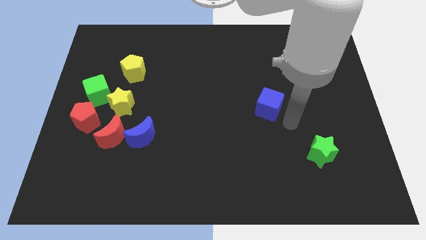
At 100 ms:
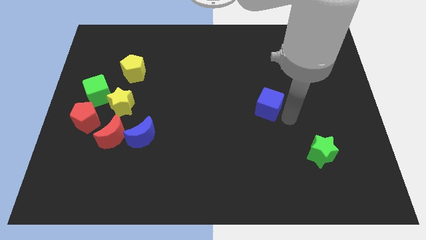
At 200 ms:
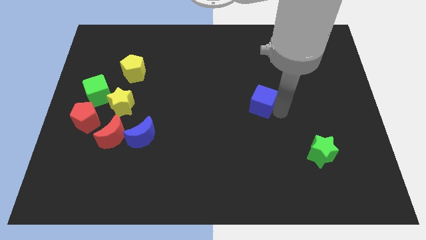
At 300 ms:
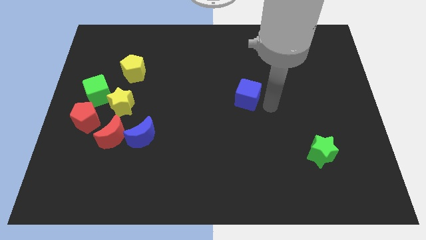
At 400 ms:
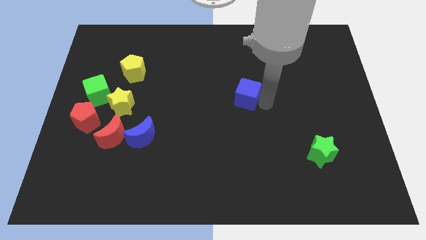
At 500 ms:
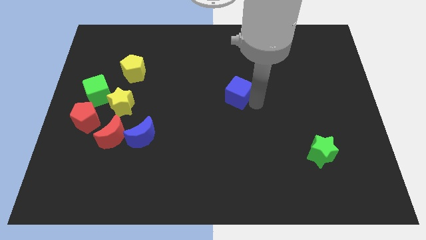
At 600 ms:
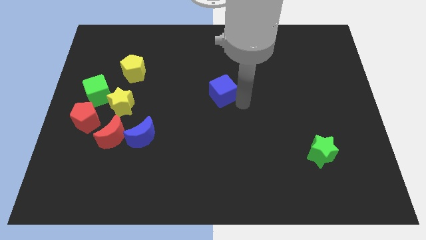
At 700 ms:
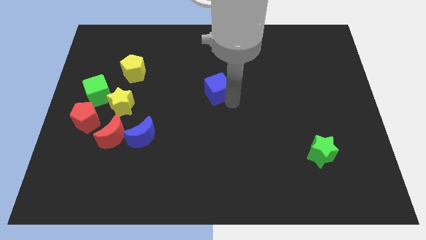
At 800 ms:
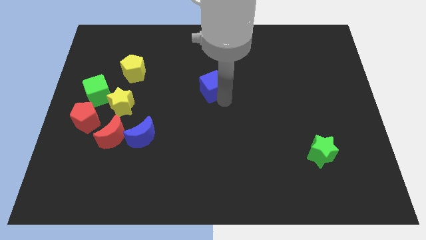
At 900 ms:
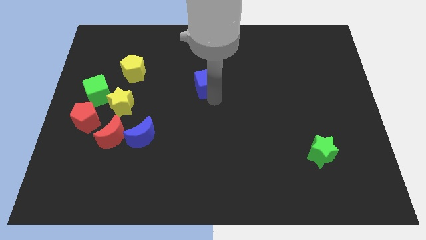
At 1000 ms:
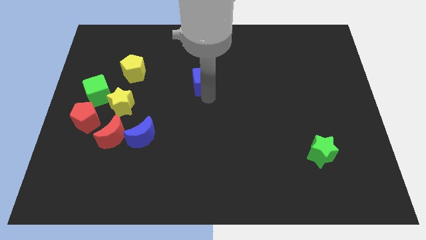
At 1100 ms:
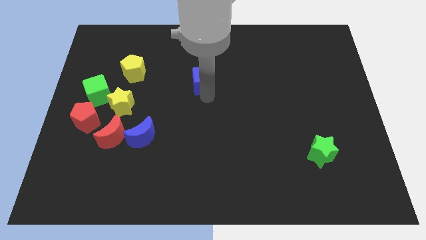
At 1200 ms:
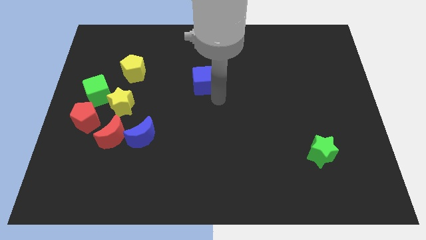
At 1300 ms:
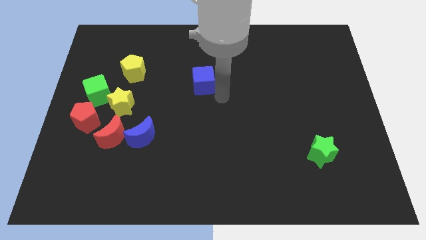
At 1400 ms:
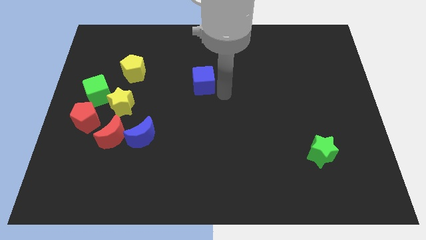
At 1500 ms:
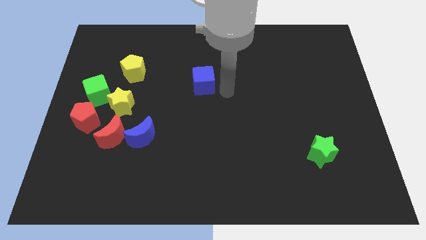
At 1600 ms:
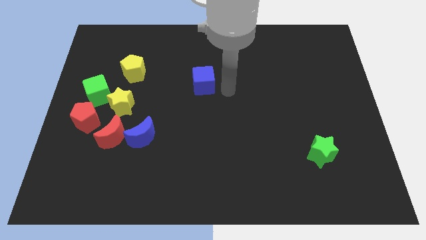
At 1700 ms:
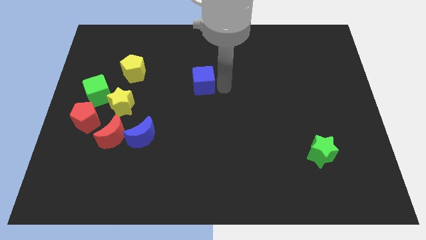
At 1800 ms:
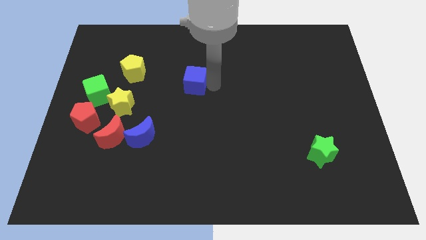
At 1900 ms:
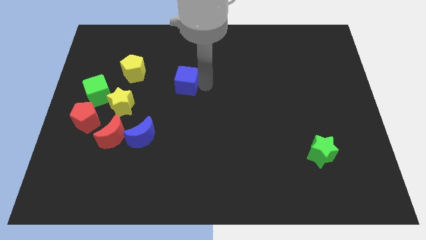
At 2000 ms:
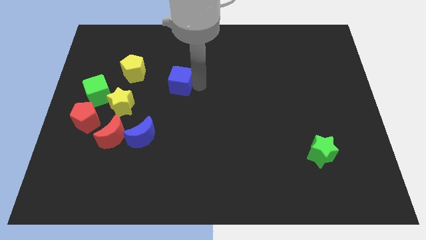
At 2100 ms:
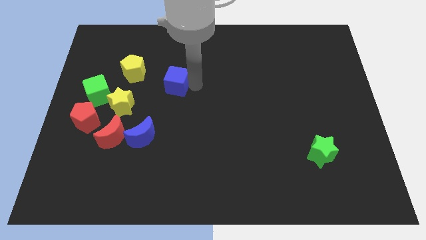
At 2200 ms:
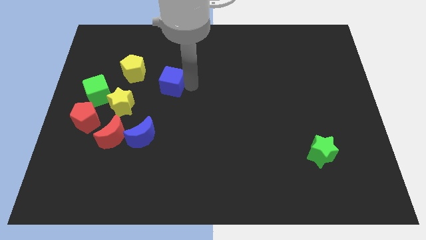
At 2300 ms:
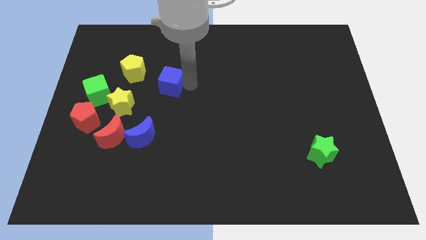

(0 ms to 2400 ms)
push the blue cube towards the left side of the board

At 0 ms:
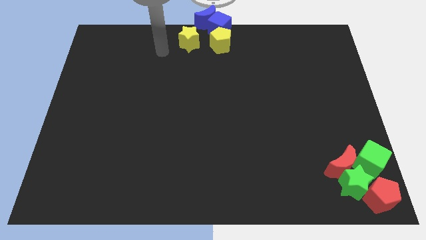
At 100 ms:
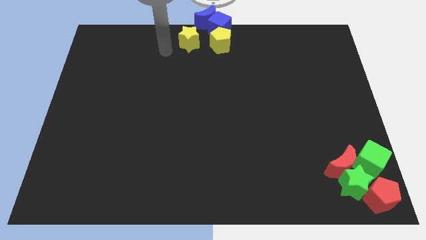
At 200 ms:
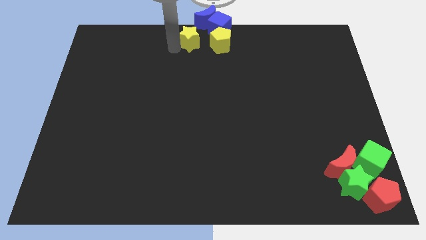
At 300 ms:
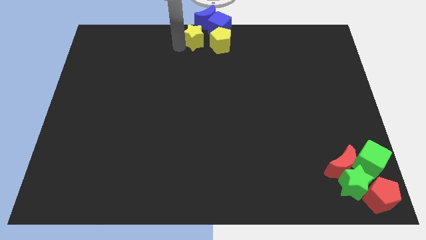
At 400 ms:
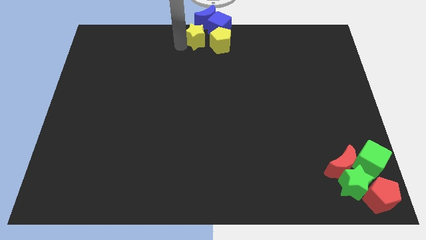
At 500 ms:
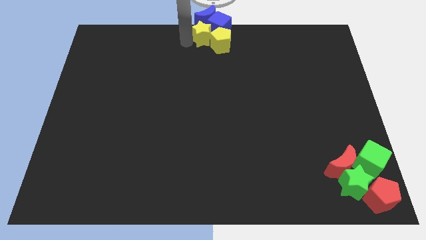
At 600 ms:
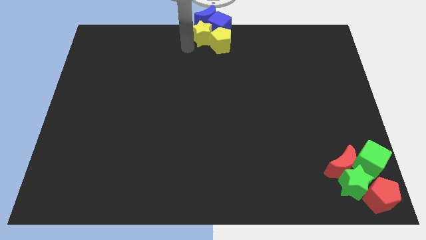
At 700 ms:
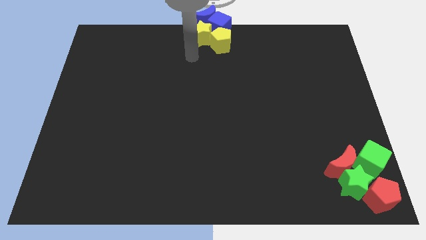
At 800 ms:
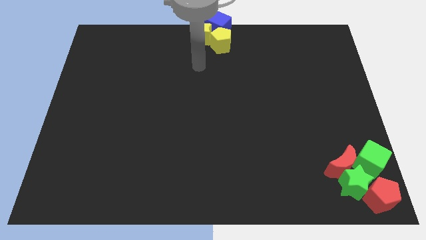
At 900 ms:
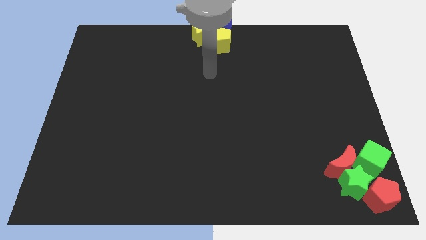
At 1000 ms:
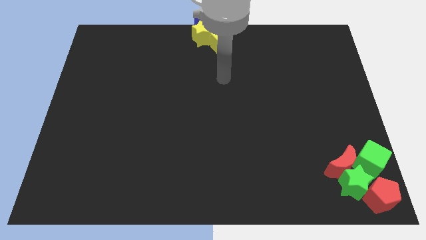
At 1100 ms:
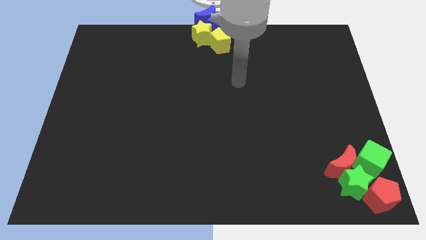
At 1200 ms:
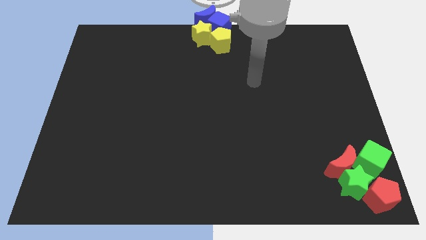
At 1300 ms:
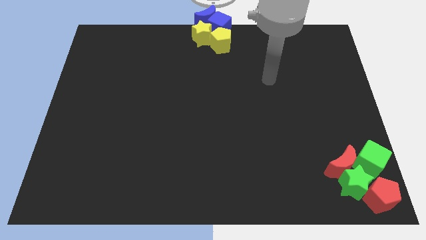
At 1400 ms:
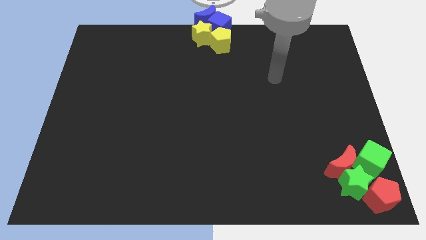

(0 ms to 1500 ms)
push the yellow star close to blue cube

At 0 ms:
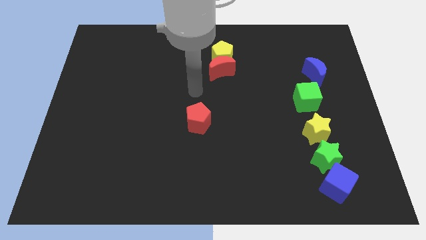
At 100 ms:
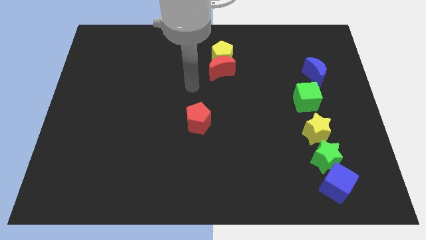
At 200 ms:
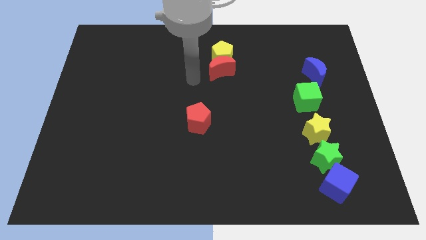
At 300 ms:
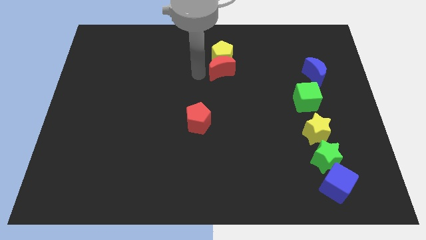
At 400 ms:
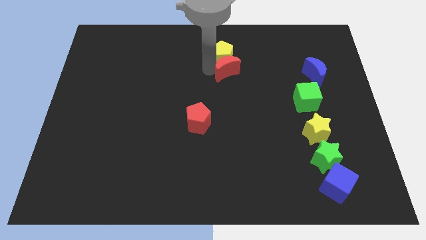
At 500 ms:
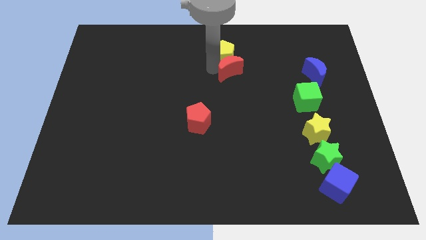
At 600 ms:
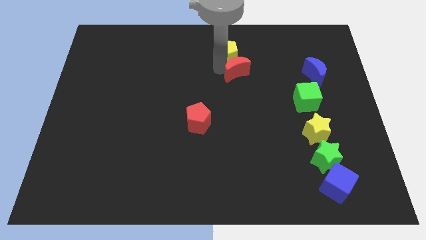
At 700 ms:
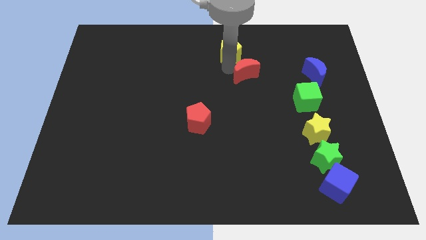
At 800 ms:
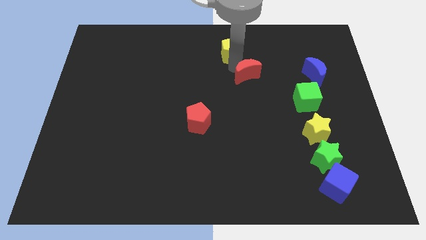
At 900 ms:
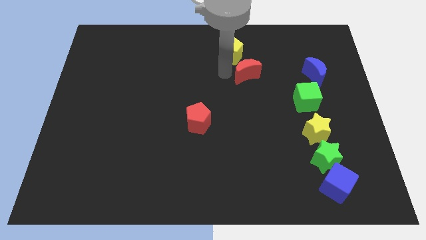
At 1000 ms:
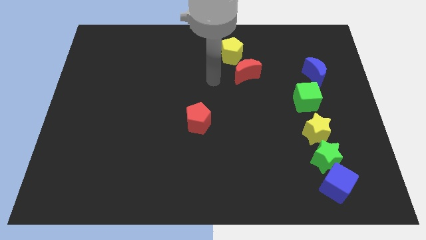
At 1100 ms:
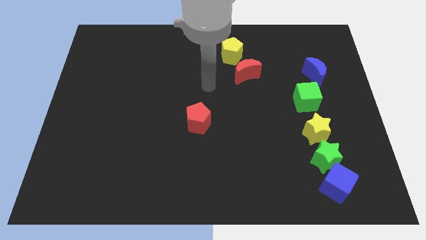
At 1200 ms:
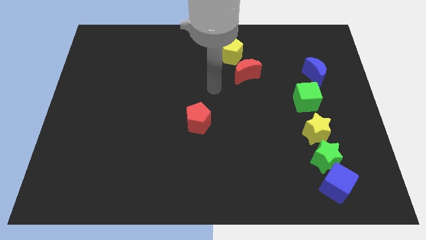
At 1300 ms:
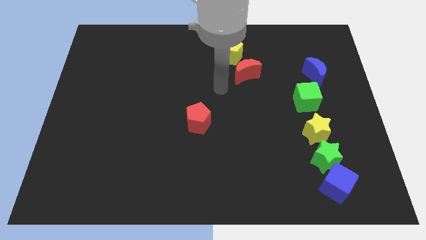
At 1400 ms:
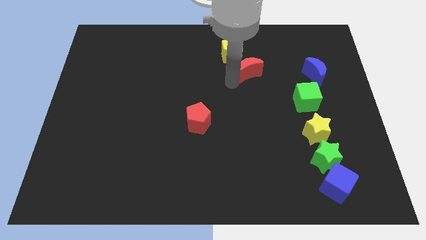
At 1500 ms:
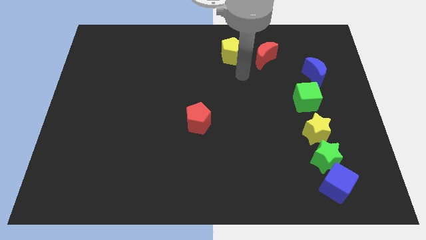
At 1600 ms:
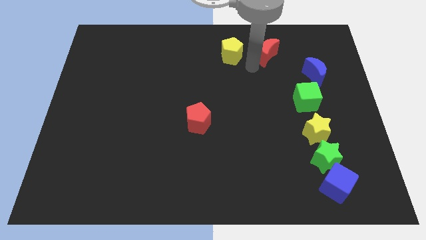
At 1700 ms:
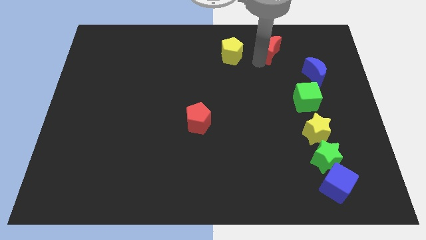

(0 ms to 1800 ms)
place red moon to the right side of the yellow pentagon

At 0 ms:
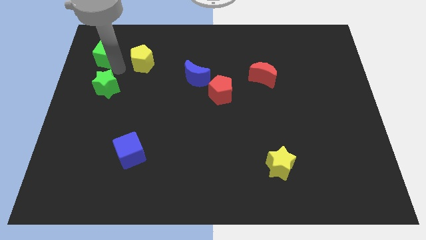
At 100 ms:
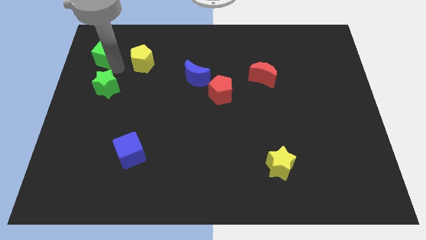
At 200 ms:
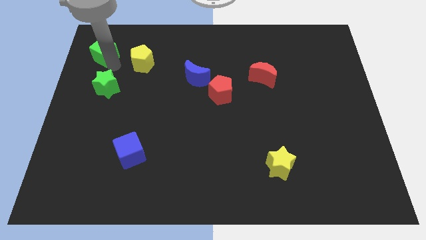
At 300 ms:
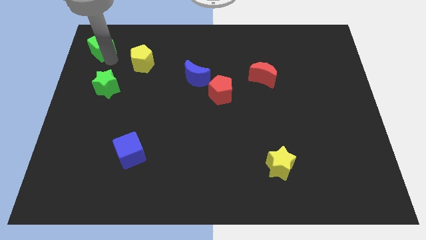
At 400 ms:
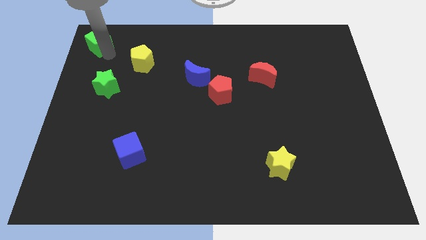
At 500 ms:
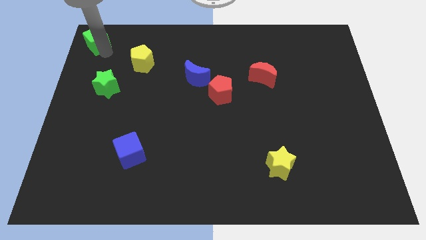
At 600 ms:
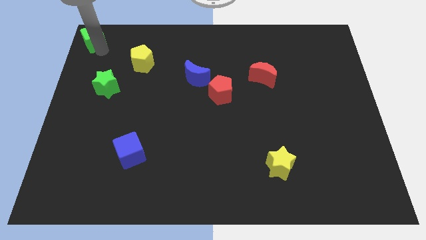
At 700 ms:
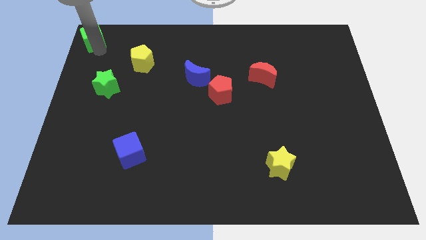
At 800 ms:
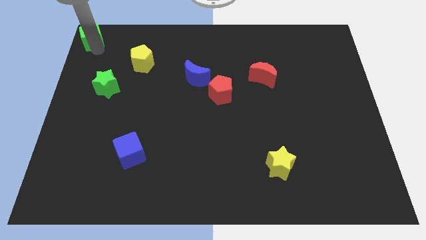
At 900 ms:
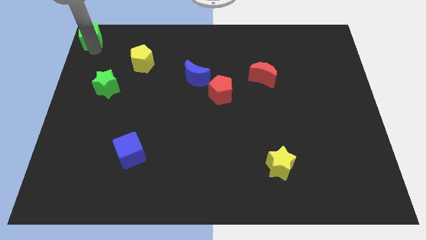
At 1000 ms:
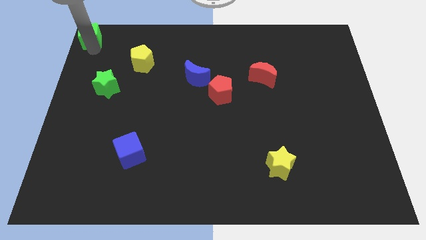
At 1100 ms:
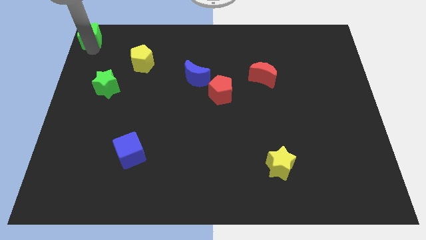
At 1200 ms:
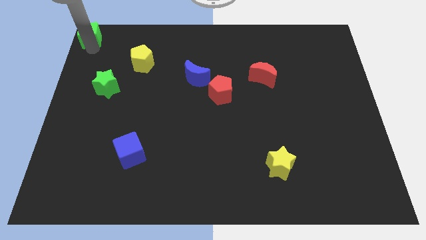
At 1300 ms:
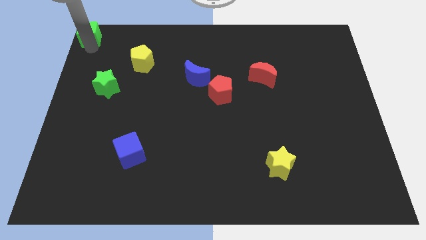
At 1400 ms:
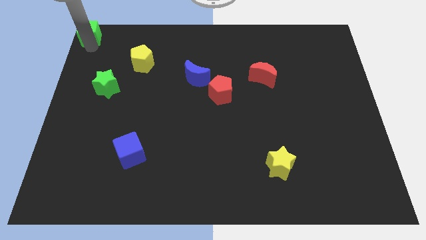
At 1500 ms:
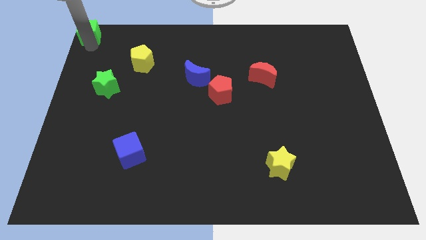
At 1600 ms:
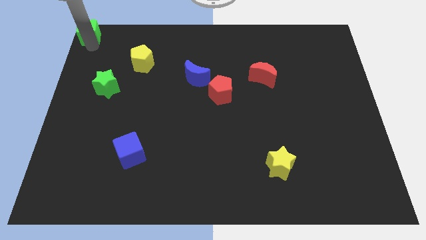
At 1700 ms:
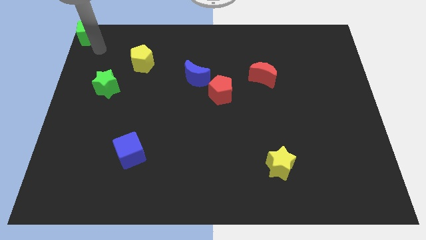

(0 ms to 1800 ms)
push the green cube to the top left corner

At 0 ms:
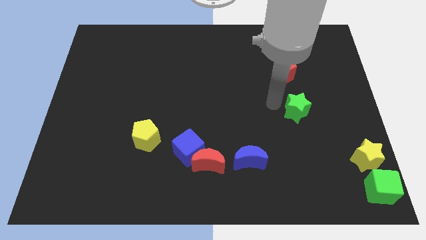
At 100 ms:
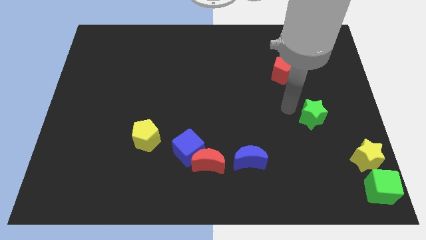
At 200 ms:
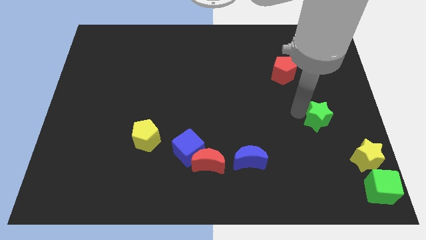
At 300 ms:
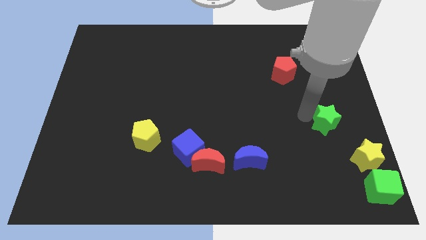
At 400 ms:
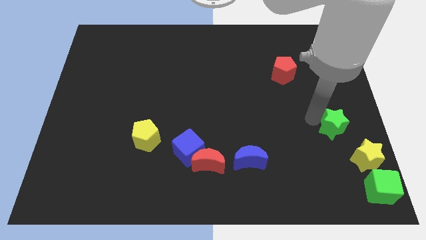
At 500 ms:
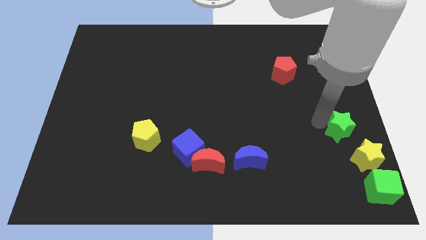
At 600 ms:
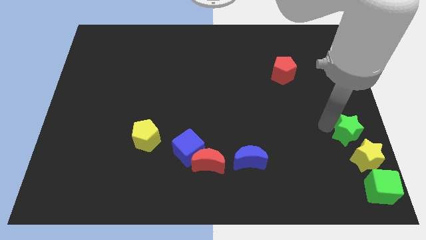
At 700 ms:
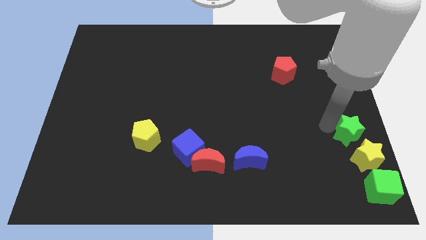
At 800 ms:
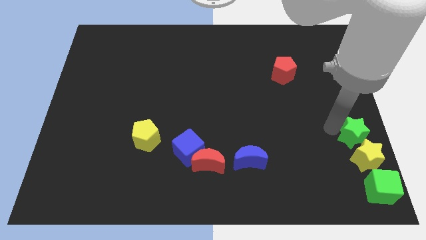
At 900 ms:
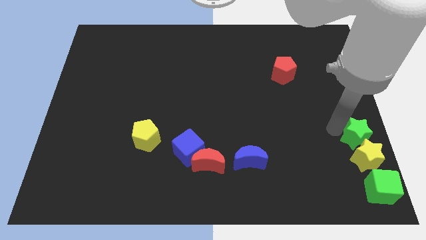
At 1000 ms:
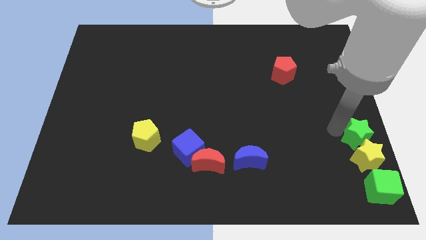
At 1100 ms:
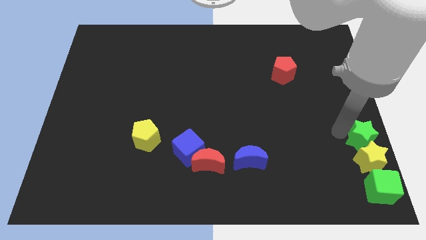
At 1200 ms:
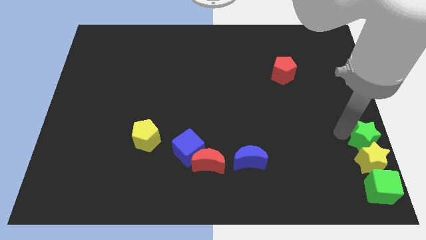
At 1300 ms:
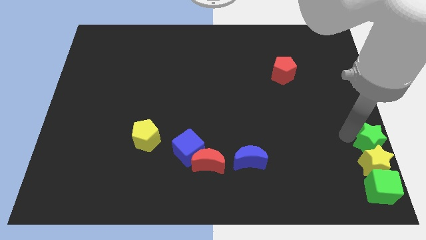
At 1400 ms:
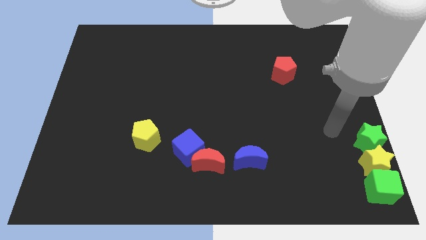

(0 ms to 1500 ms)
move the green star to the top side of the yellow star
